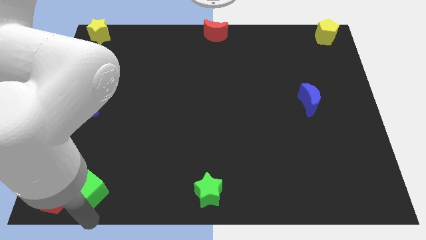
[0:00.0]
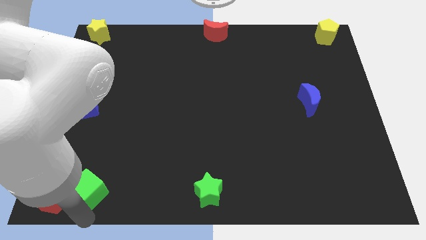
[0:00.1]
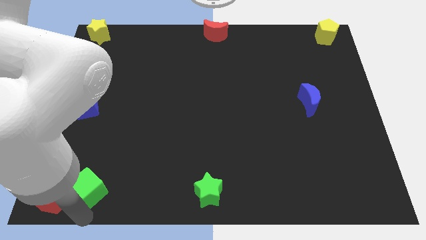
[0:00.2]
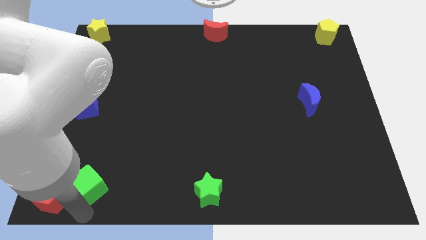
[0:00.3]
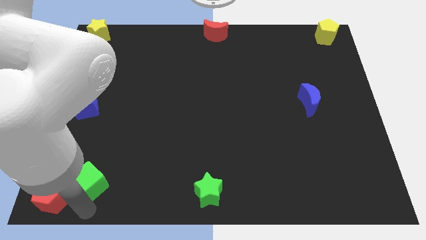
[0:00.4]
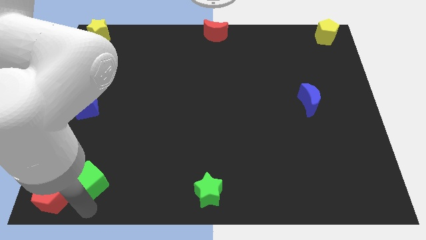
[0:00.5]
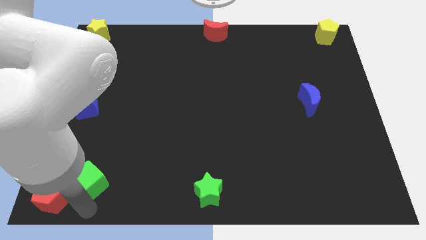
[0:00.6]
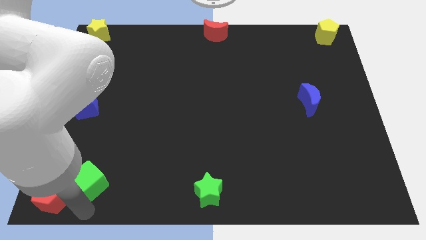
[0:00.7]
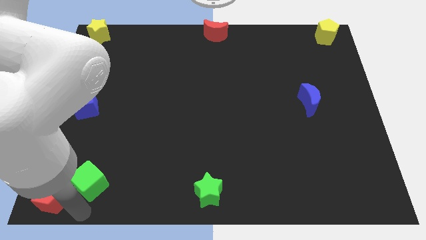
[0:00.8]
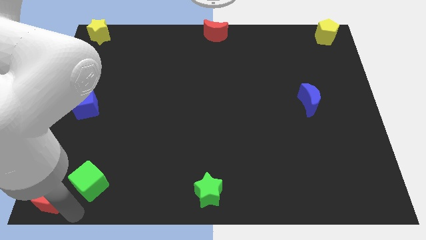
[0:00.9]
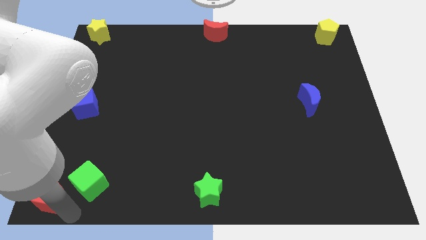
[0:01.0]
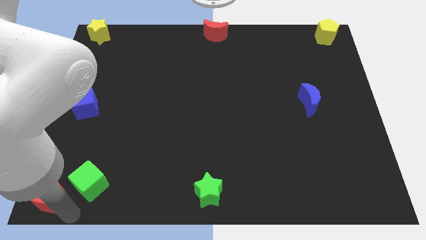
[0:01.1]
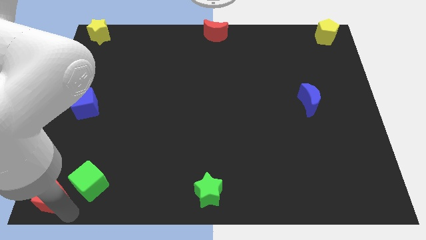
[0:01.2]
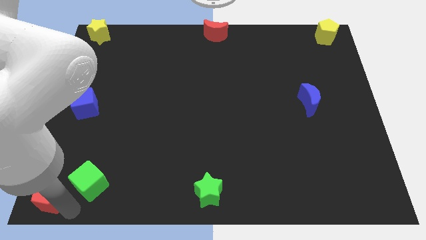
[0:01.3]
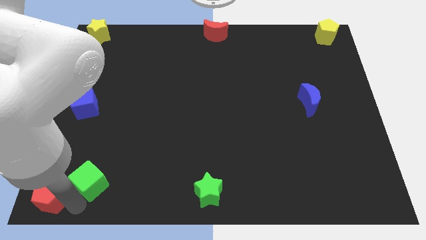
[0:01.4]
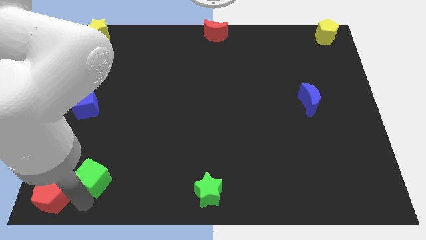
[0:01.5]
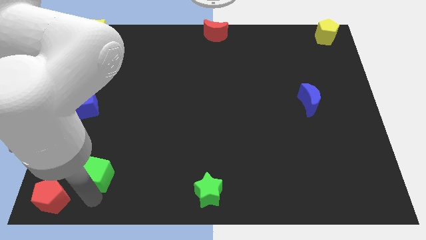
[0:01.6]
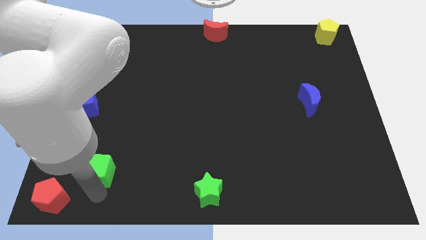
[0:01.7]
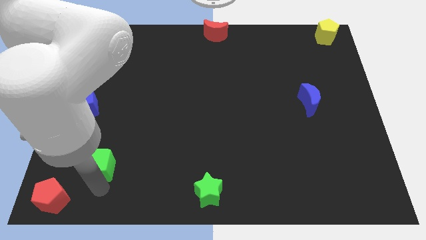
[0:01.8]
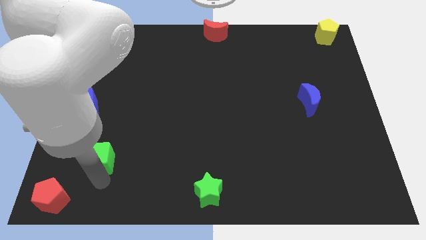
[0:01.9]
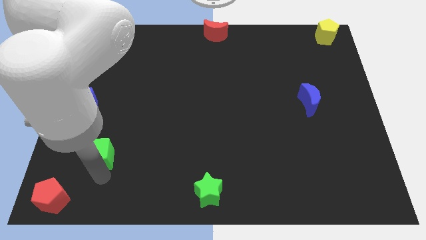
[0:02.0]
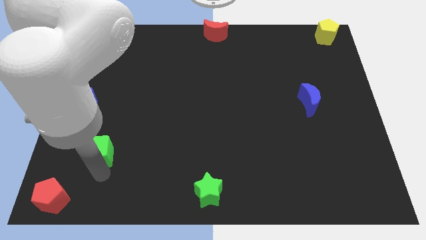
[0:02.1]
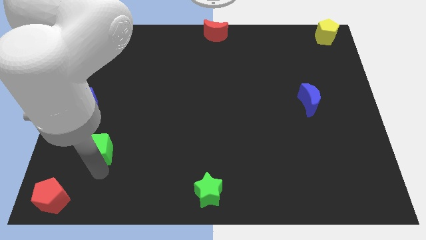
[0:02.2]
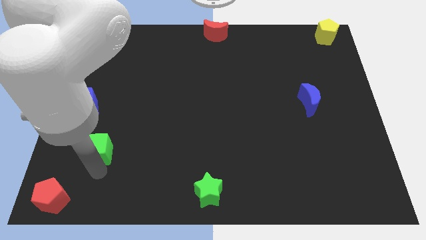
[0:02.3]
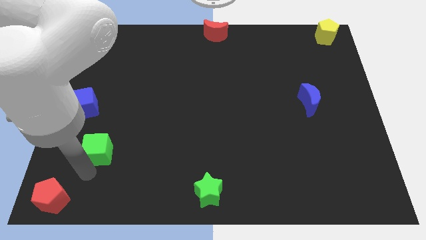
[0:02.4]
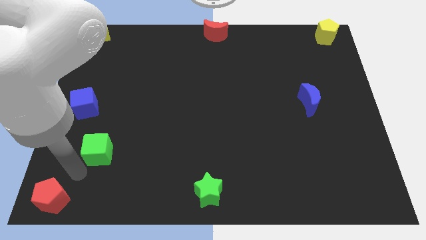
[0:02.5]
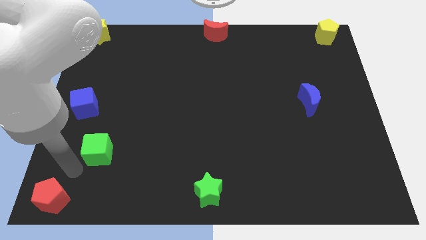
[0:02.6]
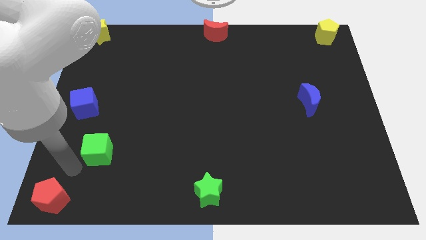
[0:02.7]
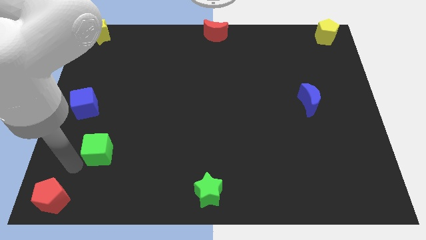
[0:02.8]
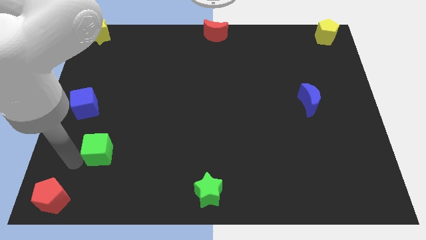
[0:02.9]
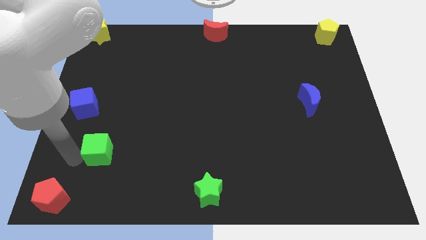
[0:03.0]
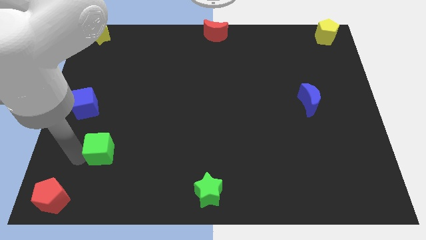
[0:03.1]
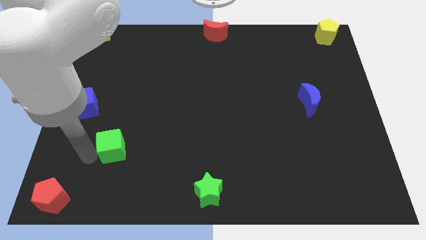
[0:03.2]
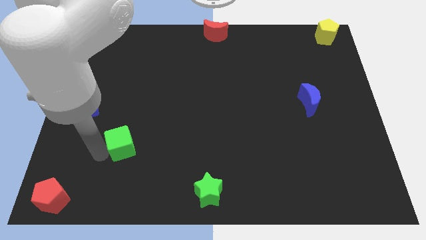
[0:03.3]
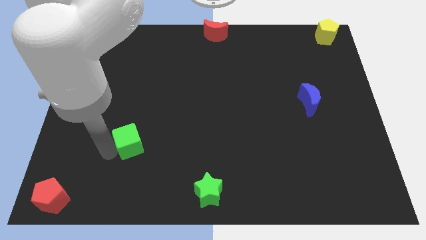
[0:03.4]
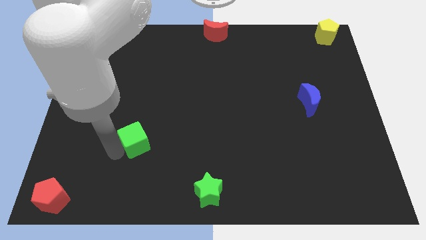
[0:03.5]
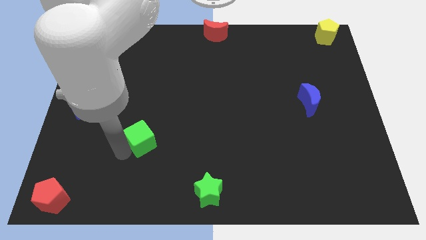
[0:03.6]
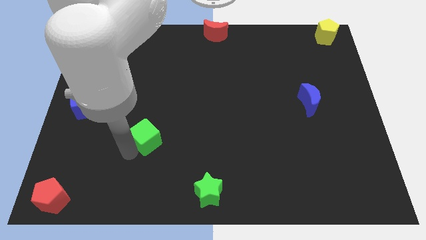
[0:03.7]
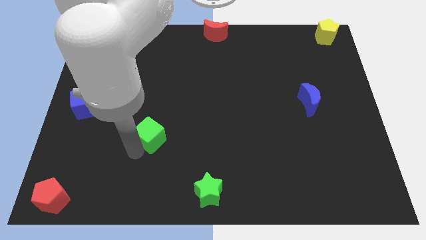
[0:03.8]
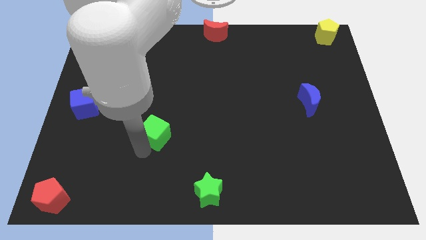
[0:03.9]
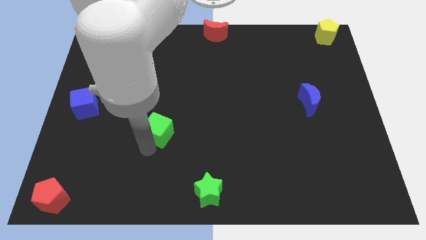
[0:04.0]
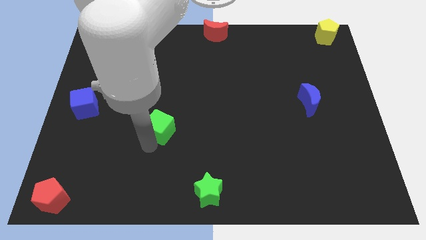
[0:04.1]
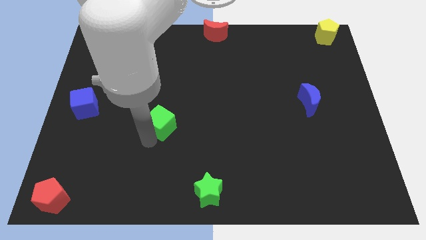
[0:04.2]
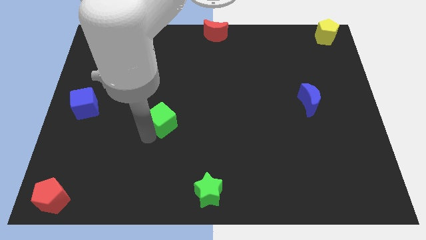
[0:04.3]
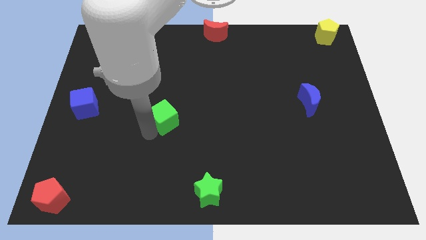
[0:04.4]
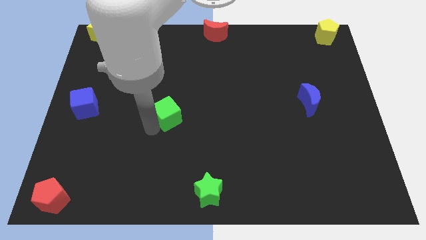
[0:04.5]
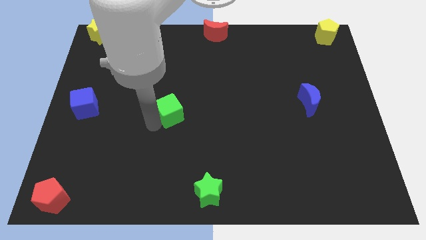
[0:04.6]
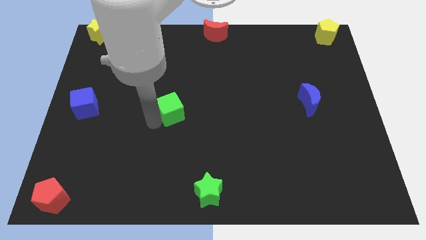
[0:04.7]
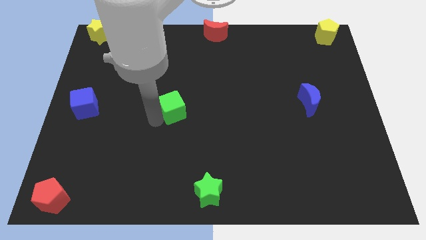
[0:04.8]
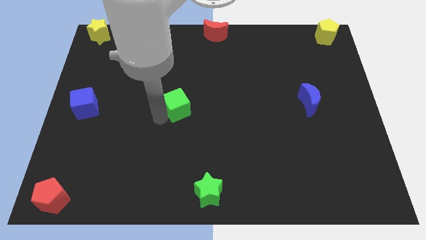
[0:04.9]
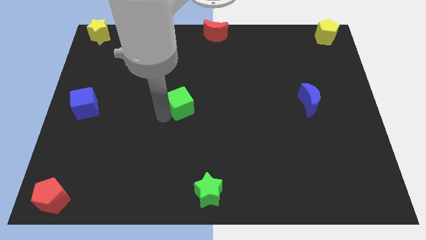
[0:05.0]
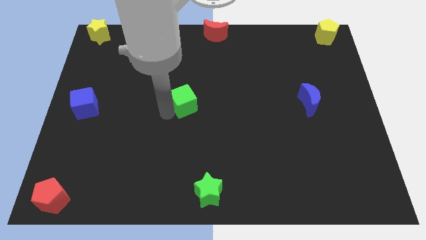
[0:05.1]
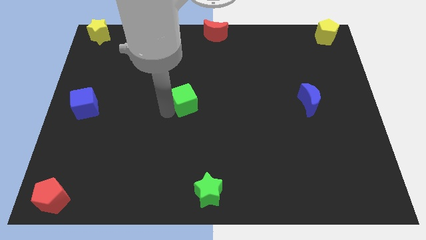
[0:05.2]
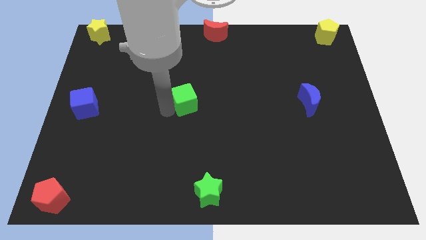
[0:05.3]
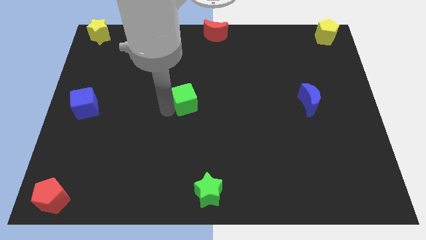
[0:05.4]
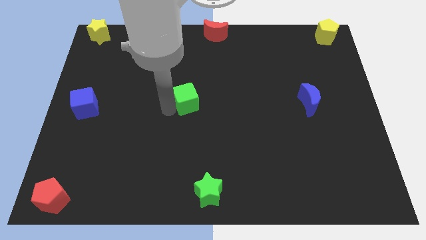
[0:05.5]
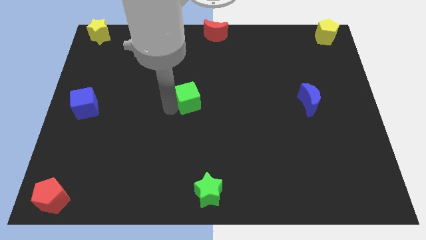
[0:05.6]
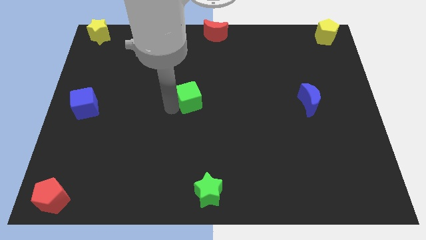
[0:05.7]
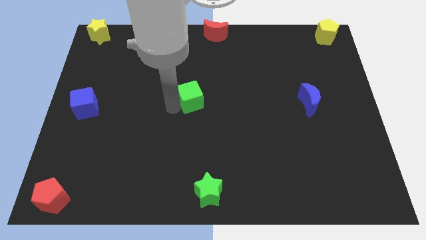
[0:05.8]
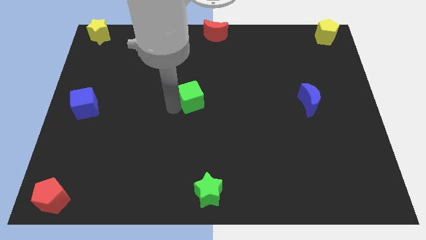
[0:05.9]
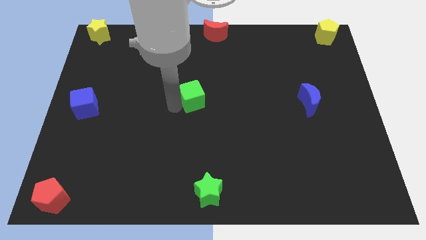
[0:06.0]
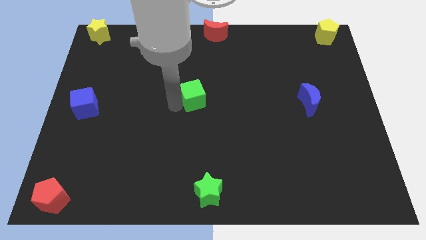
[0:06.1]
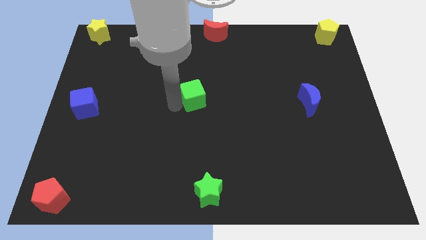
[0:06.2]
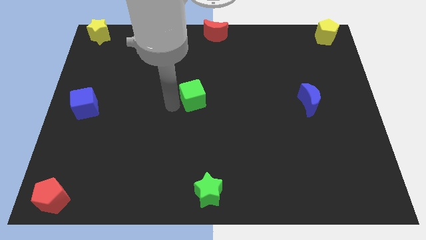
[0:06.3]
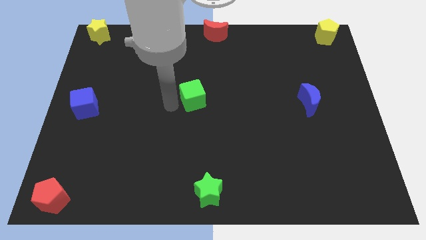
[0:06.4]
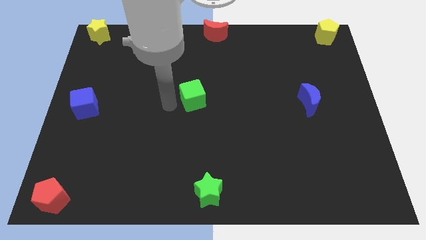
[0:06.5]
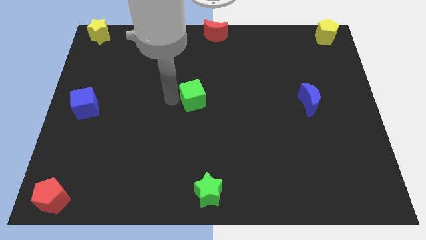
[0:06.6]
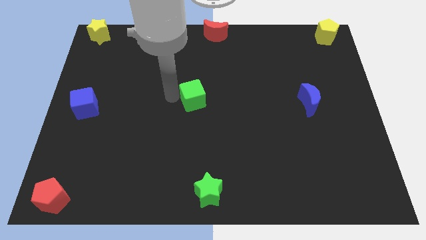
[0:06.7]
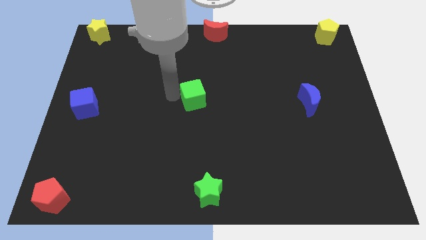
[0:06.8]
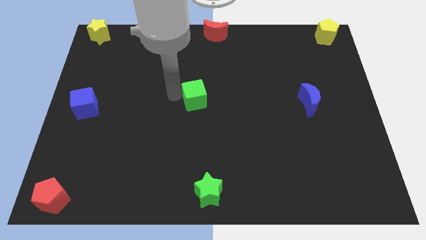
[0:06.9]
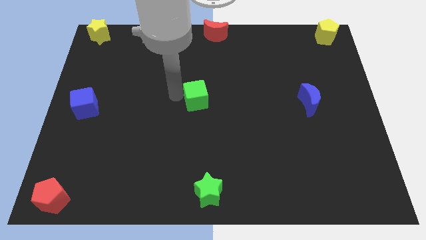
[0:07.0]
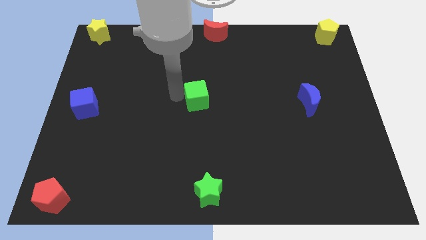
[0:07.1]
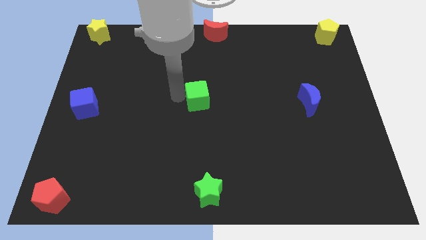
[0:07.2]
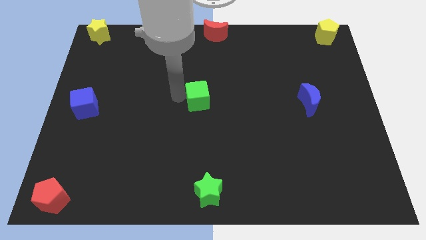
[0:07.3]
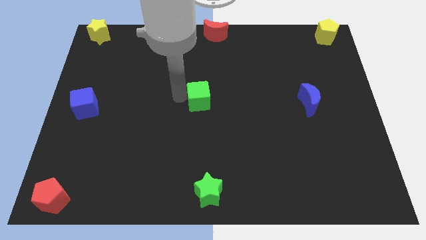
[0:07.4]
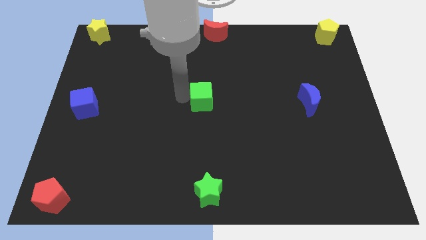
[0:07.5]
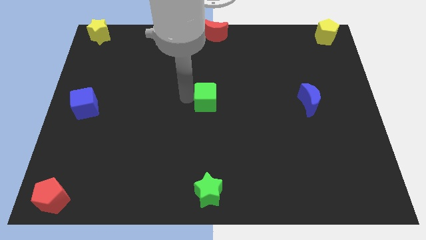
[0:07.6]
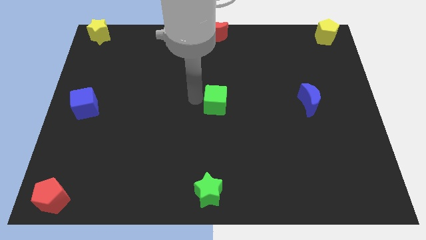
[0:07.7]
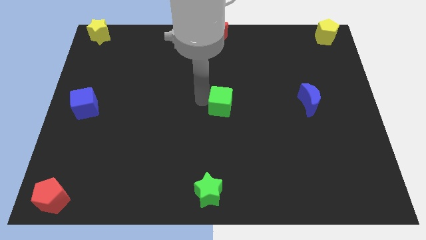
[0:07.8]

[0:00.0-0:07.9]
move the green cube to the middle of the board

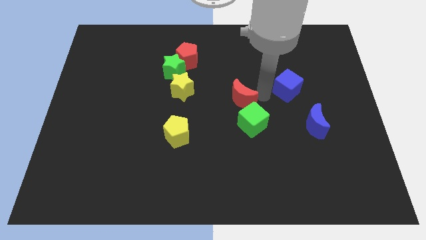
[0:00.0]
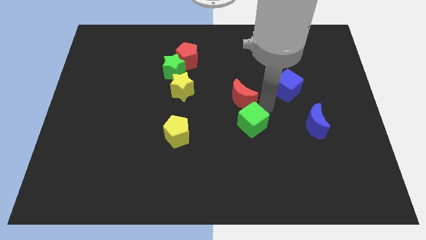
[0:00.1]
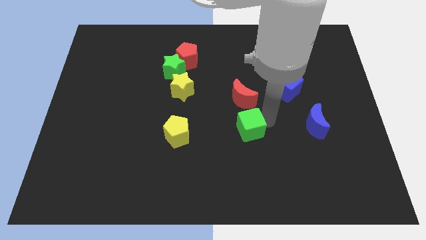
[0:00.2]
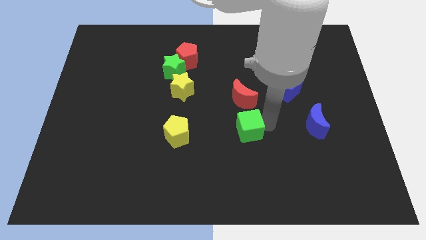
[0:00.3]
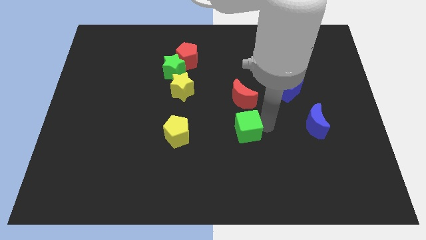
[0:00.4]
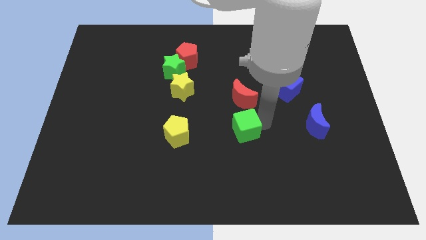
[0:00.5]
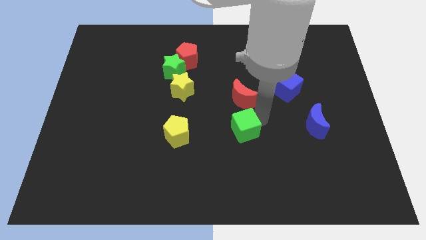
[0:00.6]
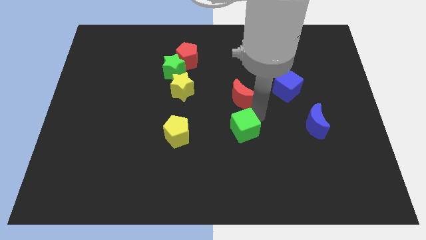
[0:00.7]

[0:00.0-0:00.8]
push the green cube slightly to the bottom
